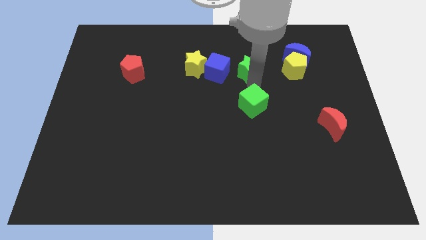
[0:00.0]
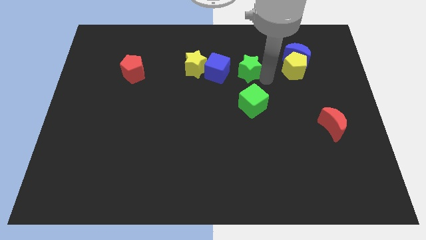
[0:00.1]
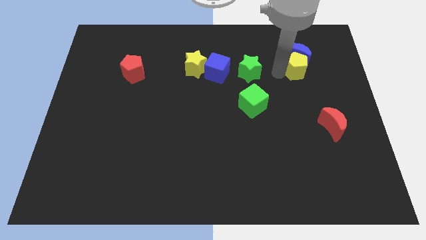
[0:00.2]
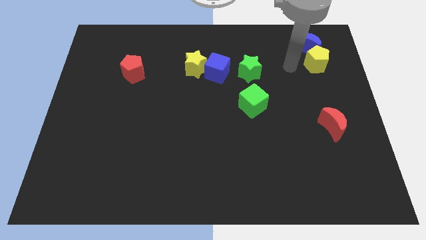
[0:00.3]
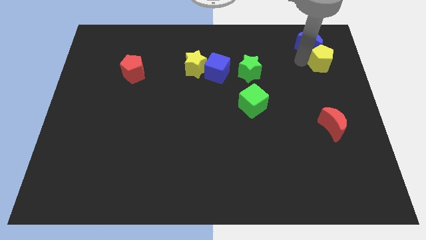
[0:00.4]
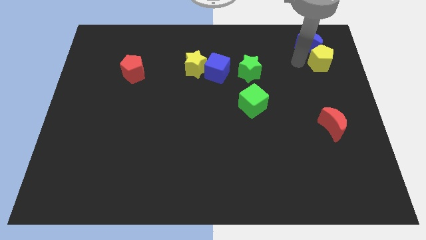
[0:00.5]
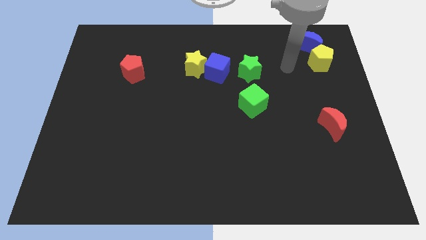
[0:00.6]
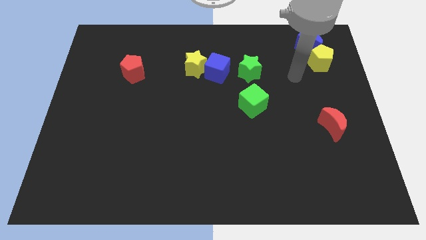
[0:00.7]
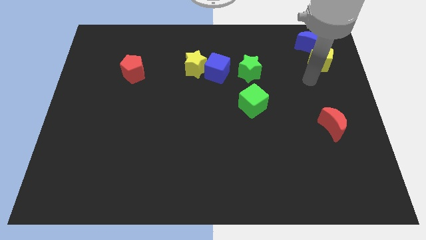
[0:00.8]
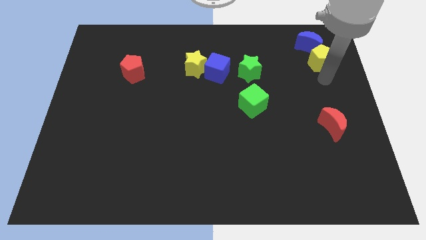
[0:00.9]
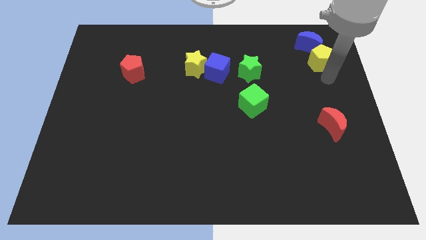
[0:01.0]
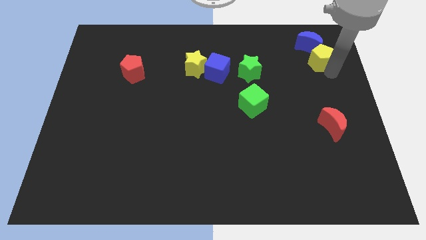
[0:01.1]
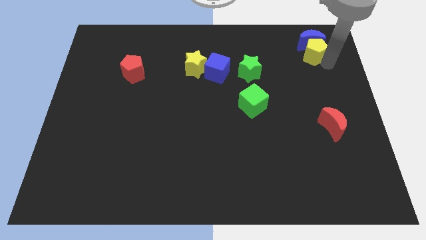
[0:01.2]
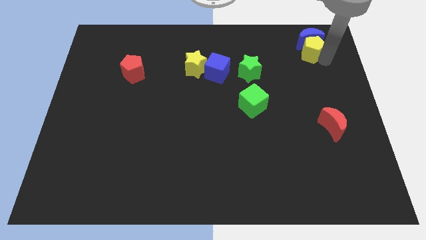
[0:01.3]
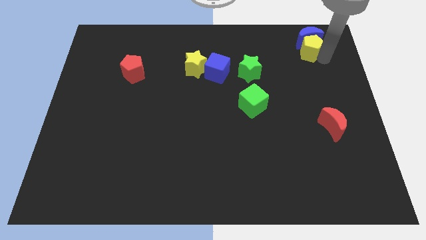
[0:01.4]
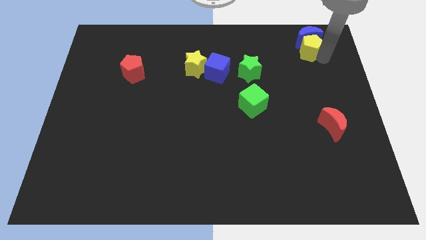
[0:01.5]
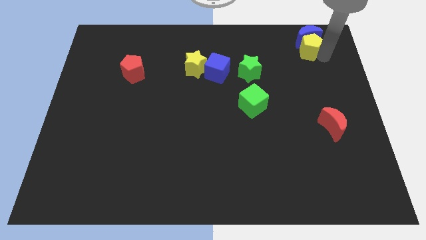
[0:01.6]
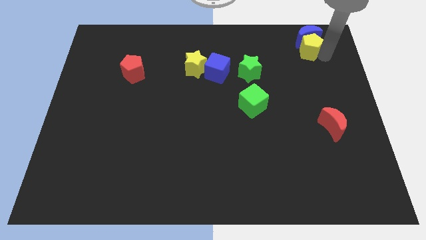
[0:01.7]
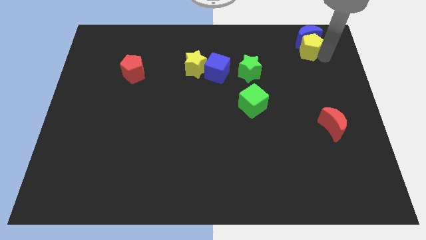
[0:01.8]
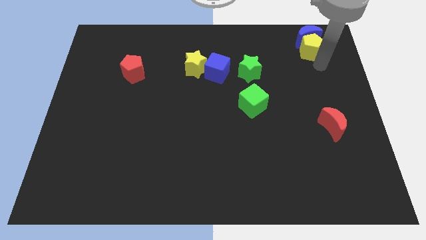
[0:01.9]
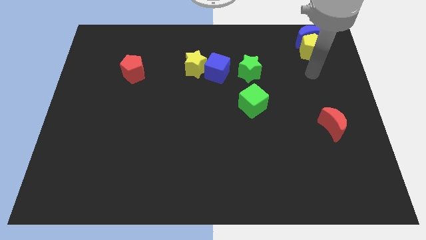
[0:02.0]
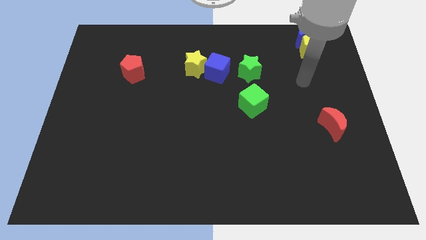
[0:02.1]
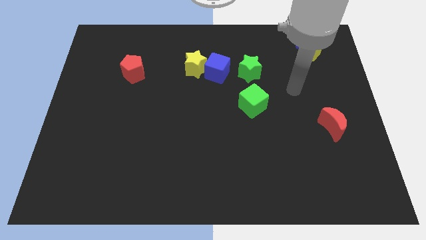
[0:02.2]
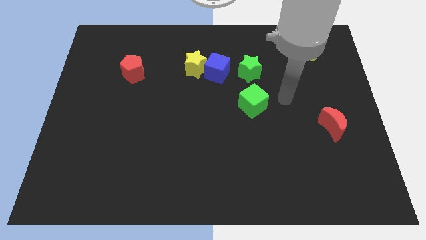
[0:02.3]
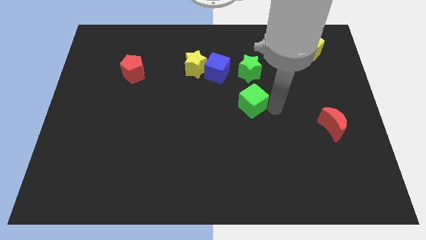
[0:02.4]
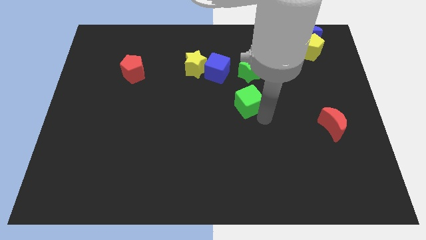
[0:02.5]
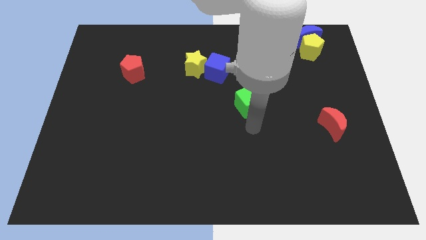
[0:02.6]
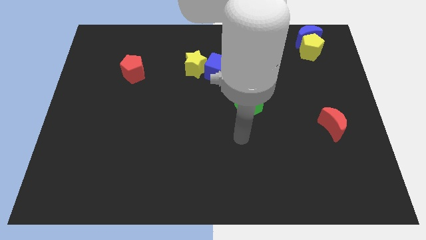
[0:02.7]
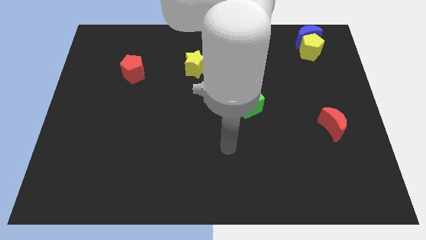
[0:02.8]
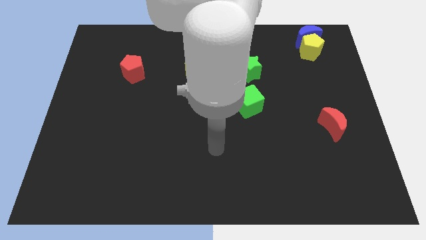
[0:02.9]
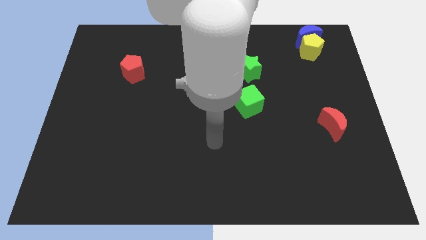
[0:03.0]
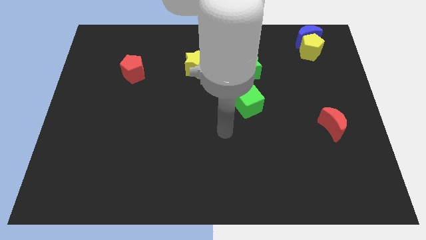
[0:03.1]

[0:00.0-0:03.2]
move blue moon and yellow pentagon to the top right of the board

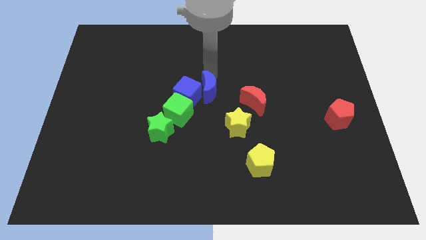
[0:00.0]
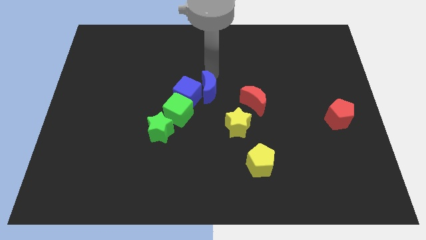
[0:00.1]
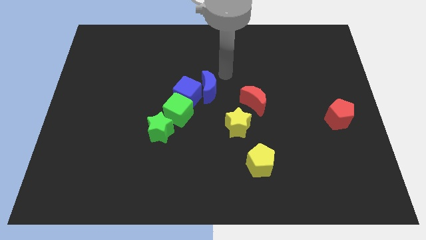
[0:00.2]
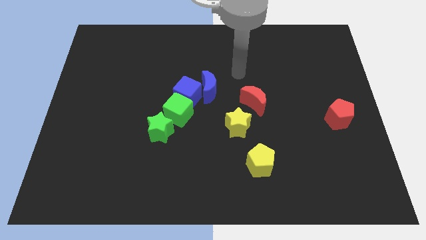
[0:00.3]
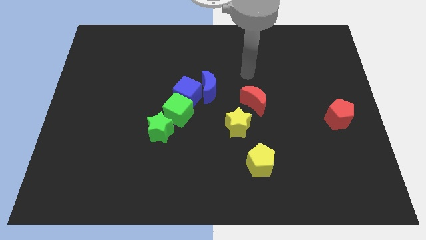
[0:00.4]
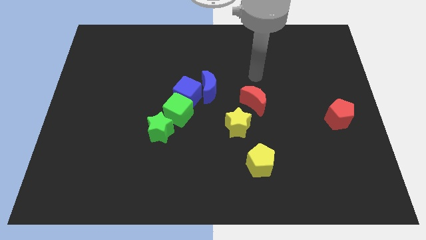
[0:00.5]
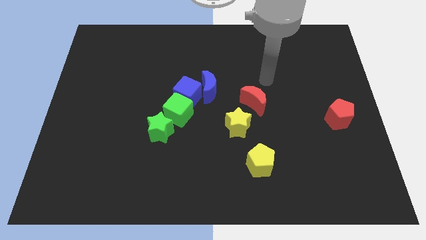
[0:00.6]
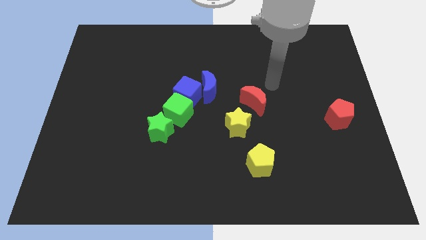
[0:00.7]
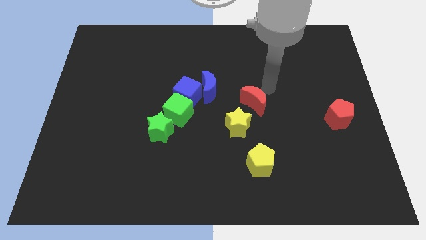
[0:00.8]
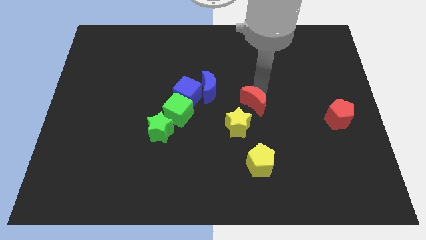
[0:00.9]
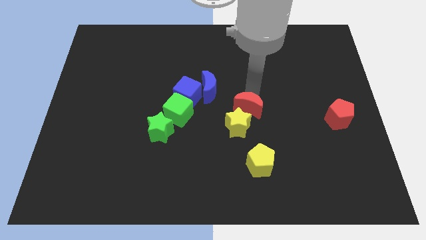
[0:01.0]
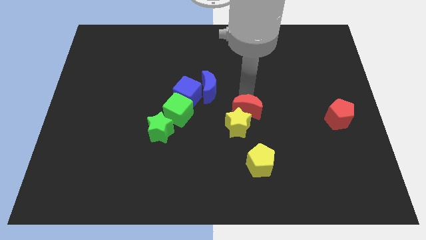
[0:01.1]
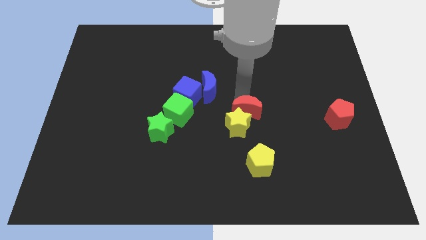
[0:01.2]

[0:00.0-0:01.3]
move the red crescent to the top of the yellow star

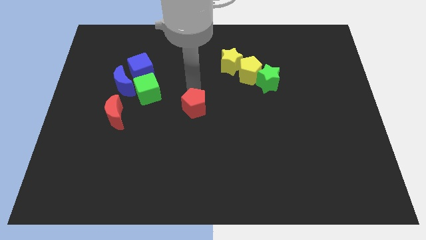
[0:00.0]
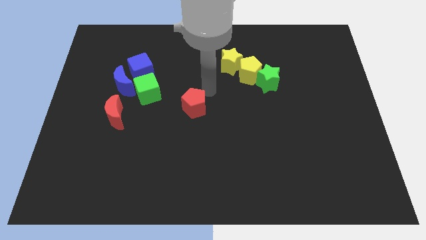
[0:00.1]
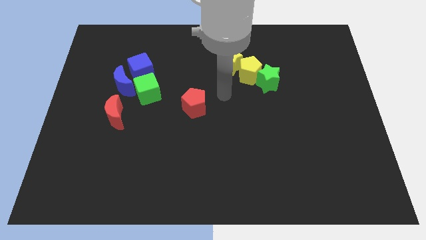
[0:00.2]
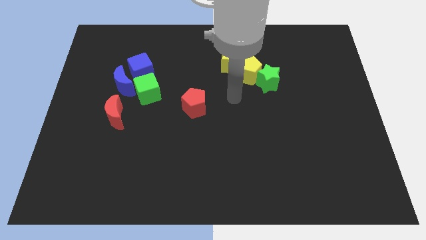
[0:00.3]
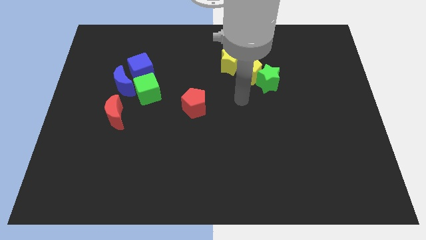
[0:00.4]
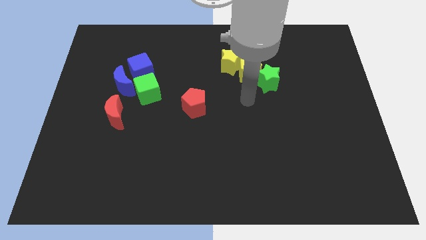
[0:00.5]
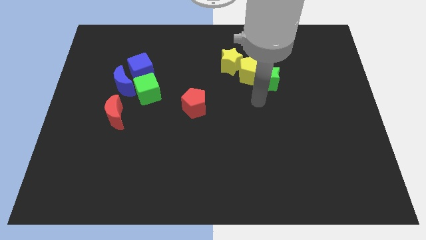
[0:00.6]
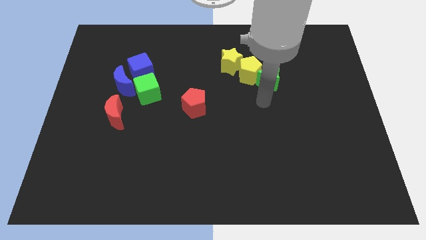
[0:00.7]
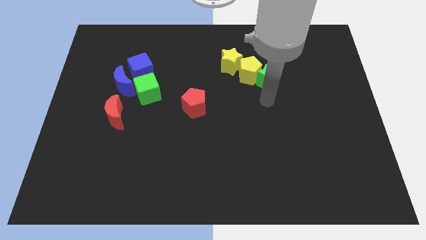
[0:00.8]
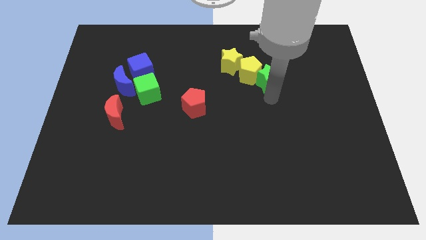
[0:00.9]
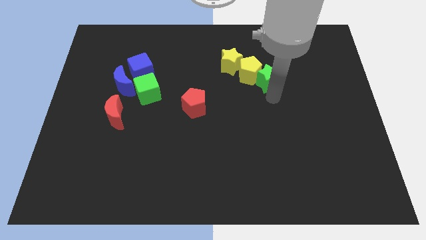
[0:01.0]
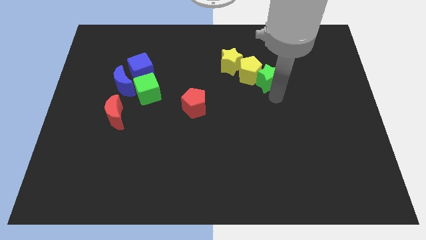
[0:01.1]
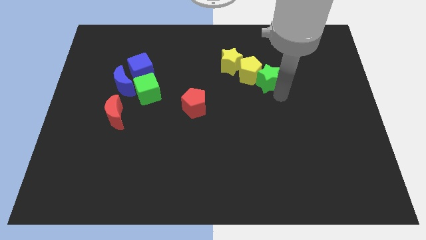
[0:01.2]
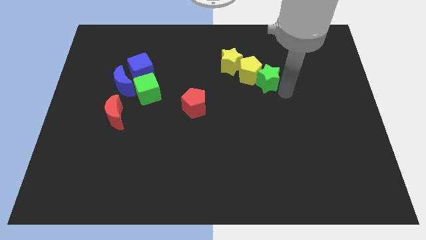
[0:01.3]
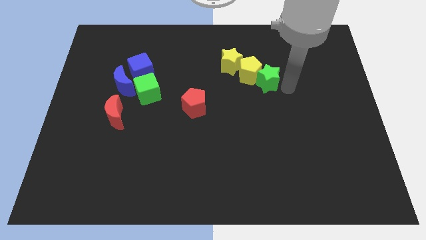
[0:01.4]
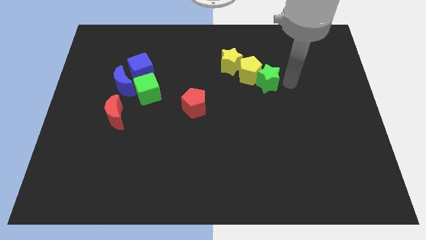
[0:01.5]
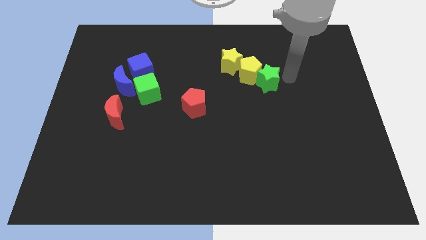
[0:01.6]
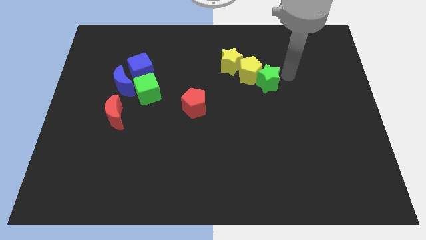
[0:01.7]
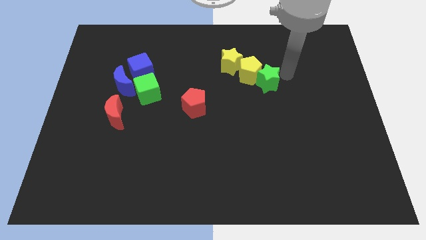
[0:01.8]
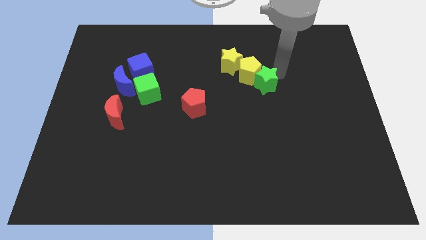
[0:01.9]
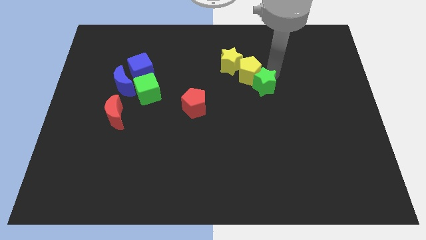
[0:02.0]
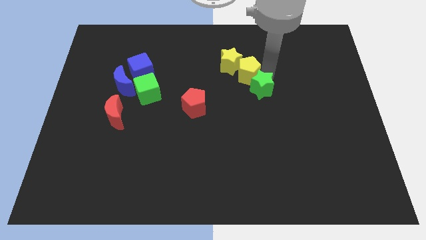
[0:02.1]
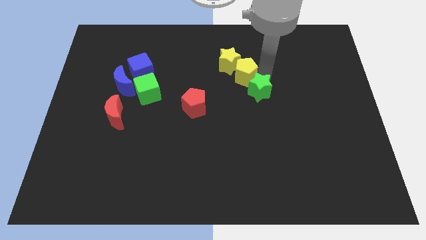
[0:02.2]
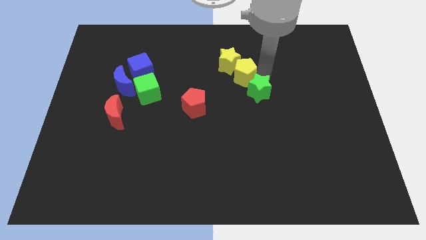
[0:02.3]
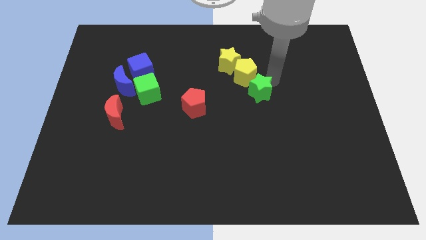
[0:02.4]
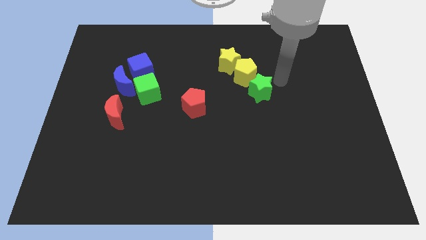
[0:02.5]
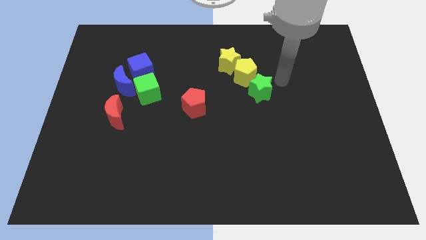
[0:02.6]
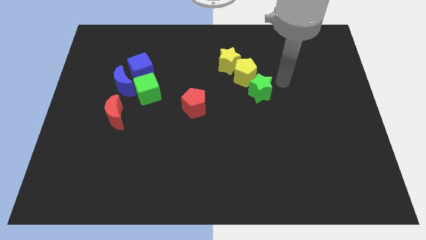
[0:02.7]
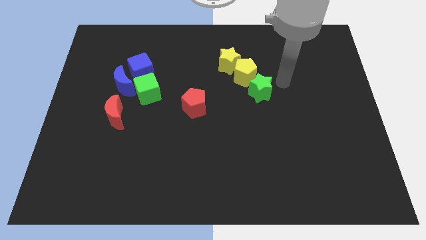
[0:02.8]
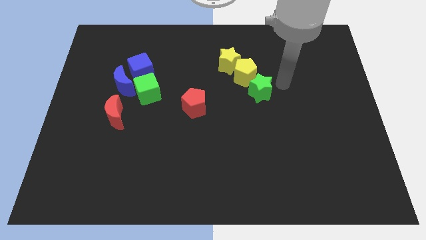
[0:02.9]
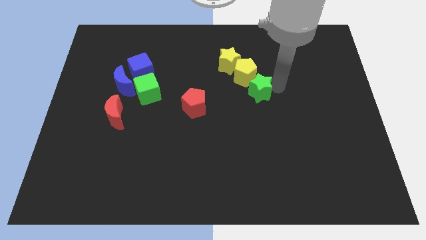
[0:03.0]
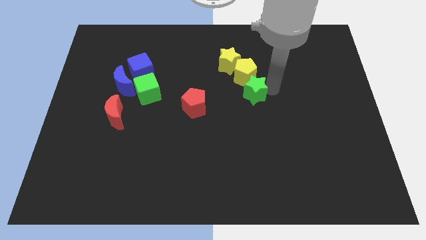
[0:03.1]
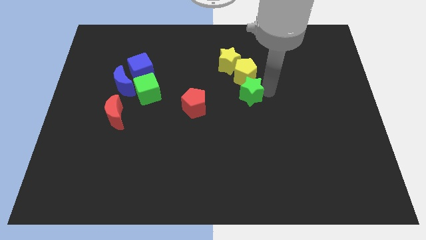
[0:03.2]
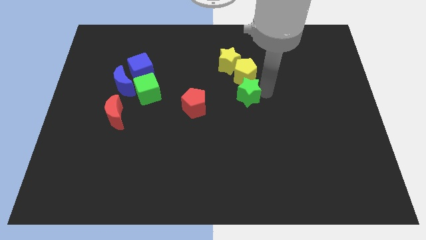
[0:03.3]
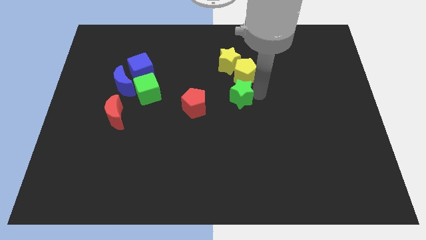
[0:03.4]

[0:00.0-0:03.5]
move the green star to the bottom side of the yellow pentagon

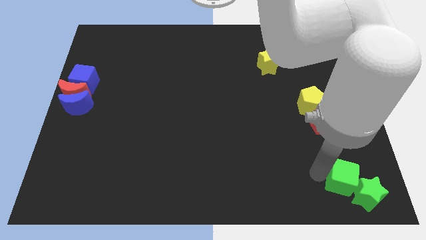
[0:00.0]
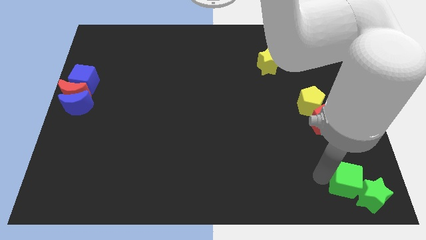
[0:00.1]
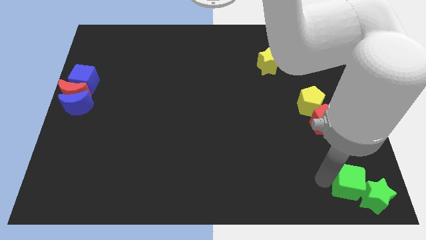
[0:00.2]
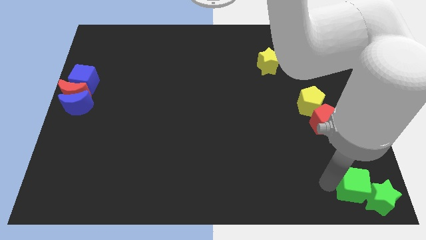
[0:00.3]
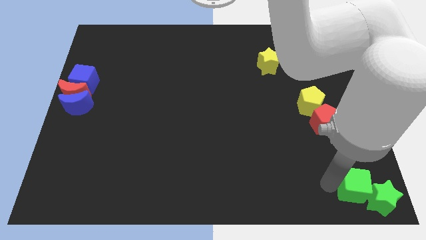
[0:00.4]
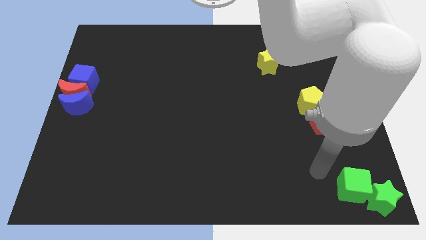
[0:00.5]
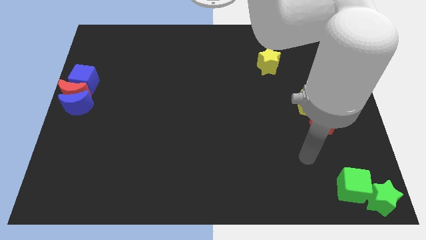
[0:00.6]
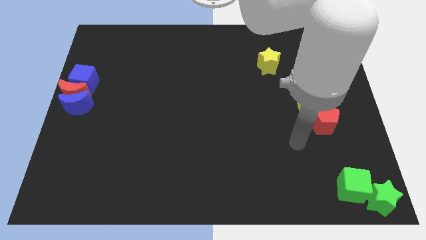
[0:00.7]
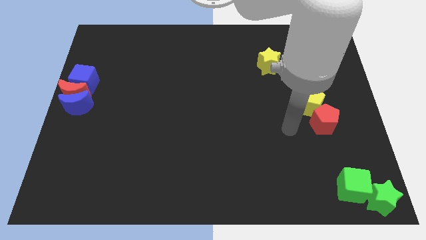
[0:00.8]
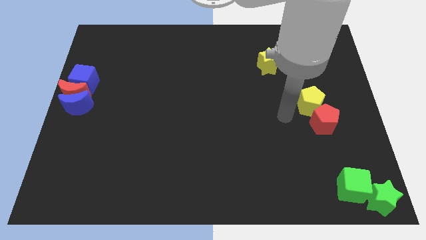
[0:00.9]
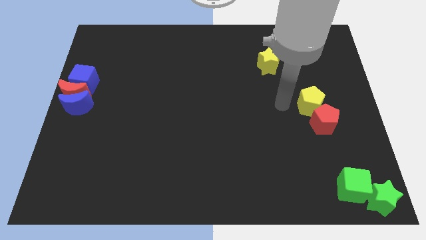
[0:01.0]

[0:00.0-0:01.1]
move the arm left to the yellow pentagon
